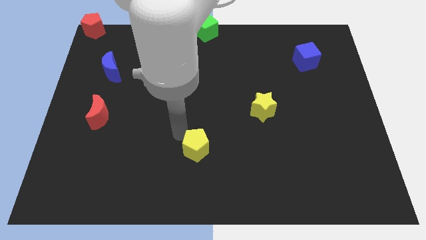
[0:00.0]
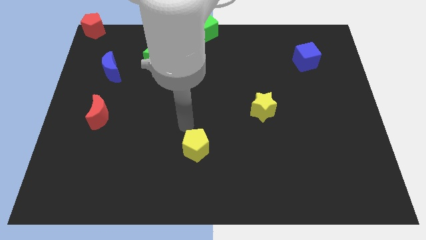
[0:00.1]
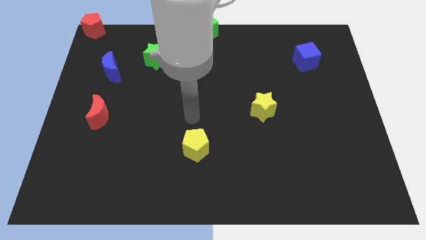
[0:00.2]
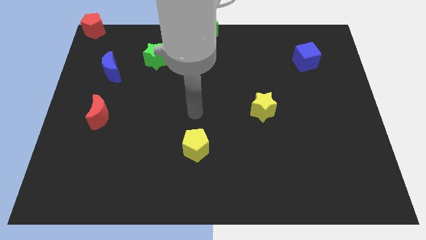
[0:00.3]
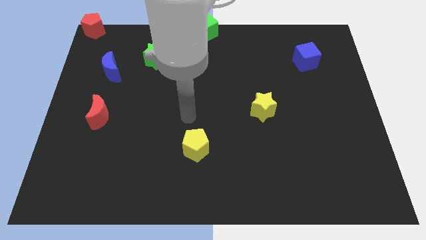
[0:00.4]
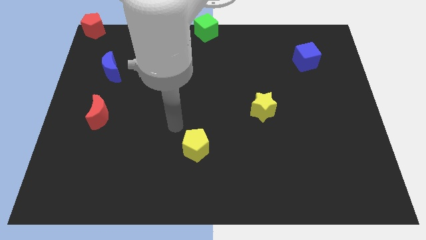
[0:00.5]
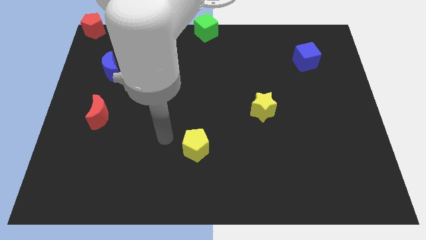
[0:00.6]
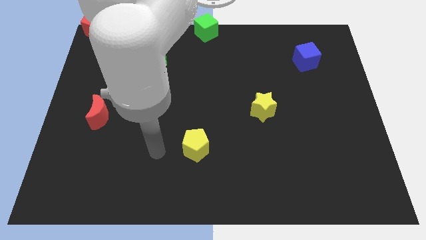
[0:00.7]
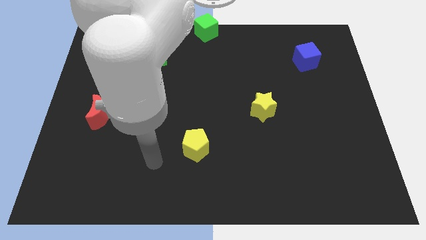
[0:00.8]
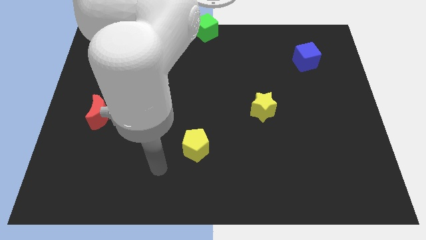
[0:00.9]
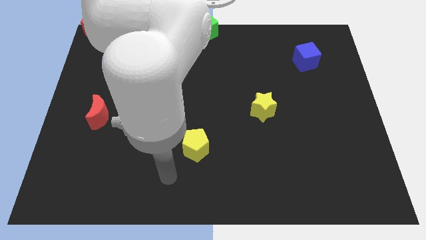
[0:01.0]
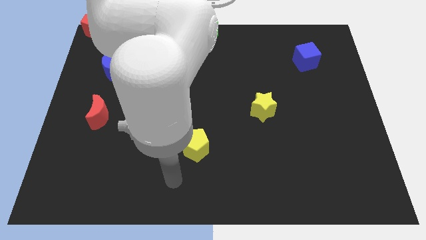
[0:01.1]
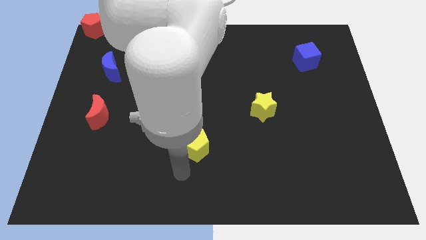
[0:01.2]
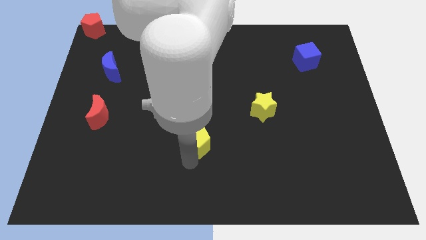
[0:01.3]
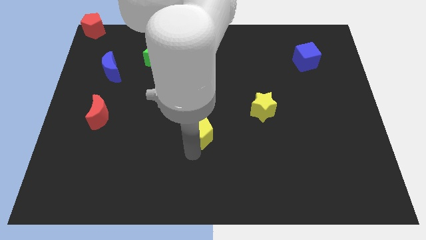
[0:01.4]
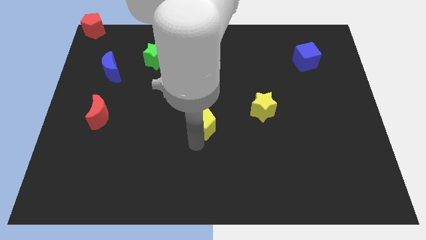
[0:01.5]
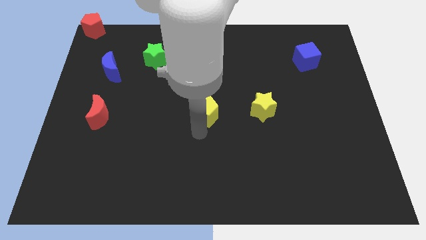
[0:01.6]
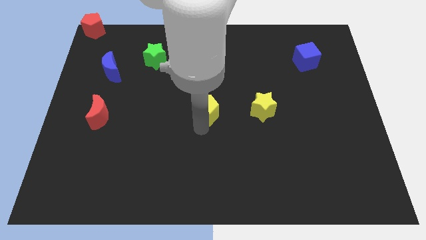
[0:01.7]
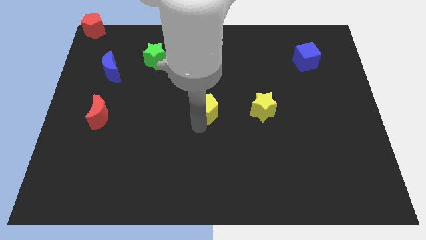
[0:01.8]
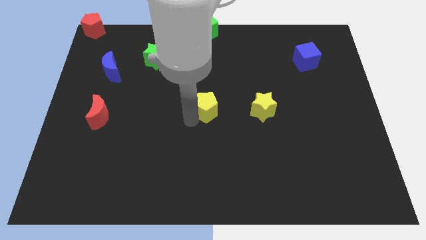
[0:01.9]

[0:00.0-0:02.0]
push the yellow pentagon to the left of the yellow star

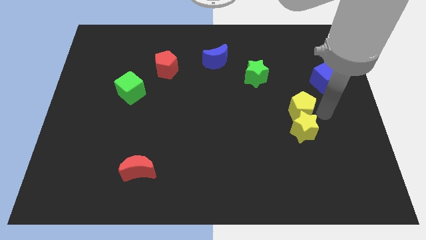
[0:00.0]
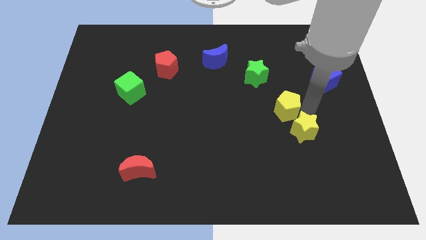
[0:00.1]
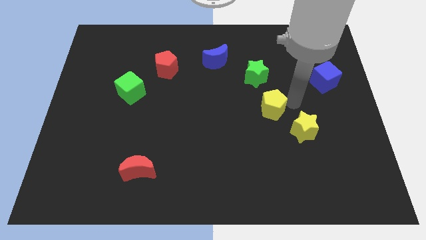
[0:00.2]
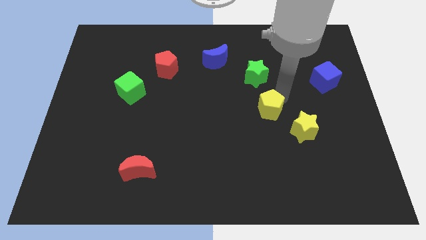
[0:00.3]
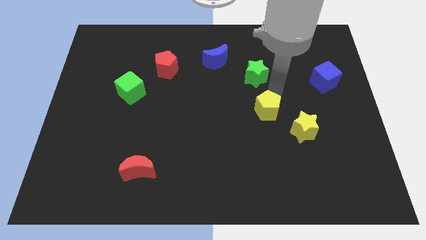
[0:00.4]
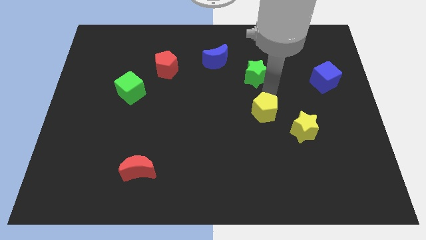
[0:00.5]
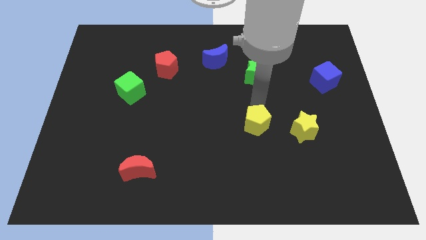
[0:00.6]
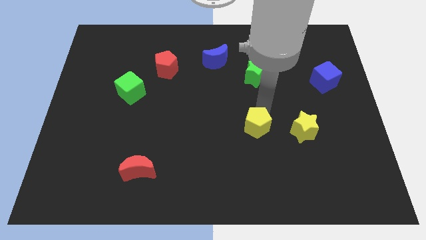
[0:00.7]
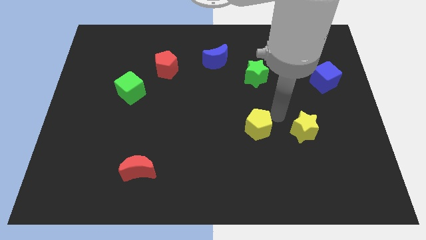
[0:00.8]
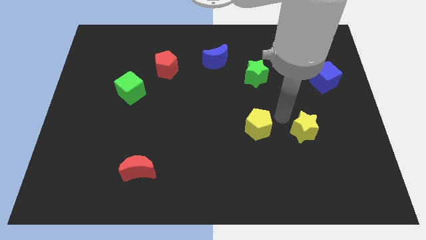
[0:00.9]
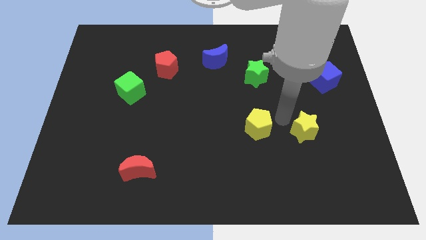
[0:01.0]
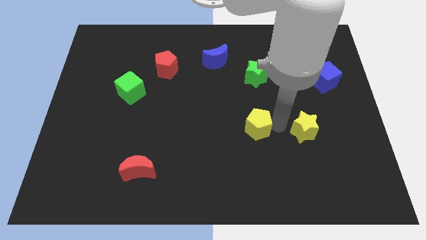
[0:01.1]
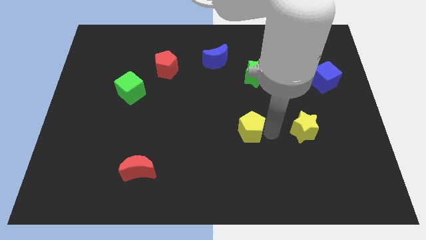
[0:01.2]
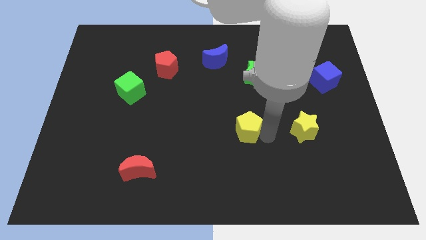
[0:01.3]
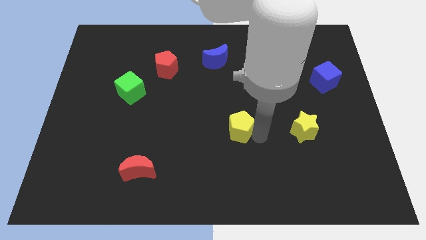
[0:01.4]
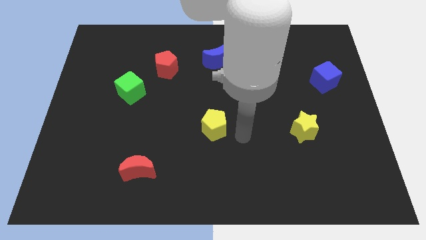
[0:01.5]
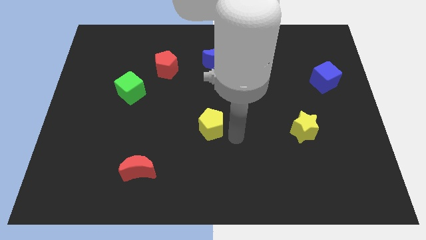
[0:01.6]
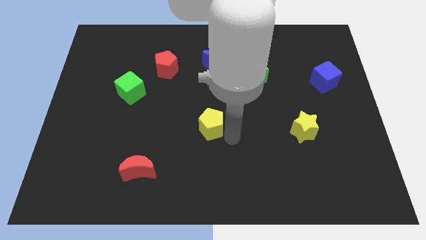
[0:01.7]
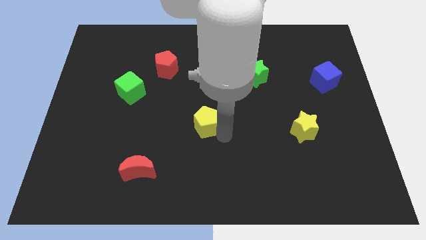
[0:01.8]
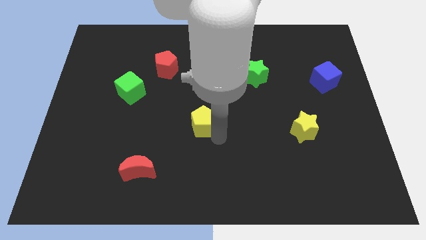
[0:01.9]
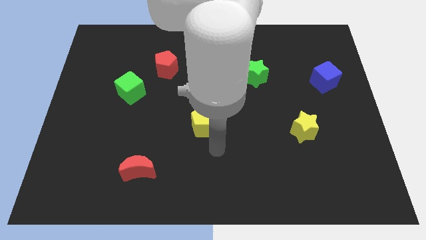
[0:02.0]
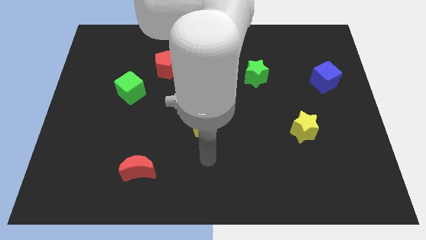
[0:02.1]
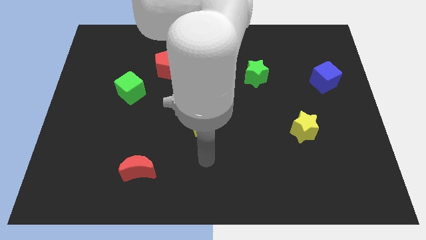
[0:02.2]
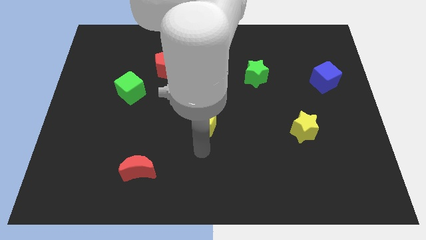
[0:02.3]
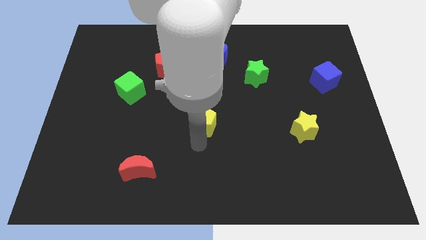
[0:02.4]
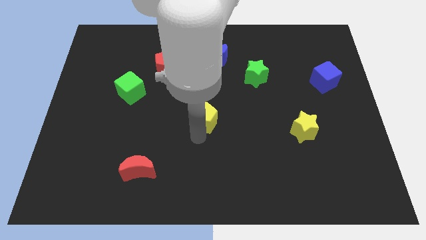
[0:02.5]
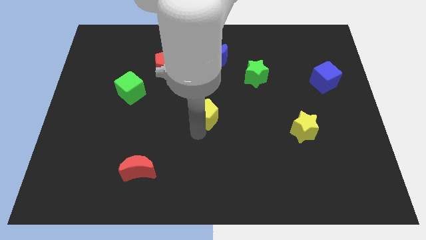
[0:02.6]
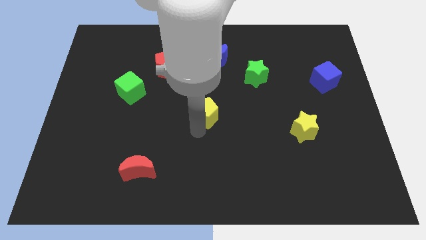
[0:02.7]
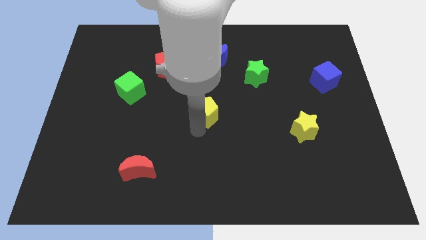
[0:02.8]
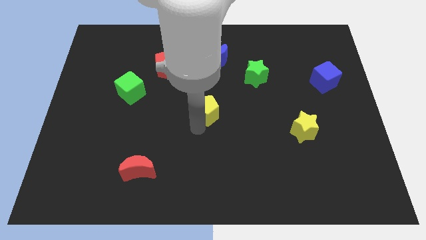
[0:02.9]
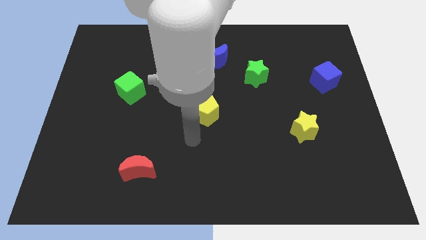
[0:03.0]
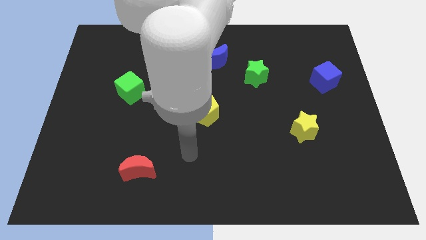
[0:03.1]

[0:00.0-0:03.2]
push the yellow pentagon to the right of the green cube

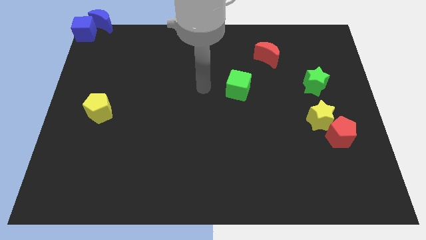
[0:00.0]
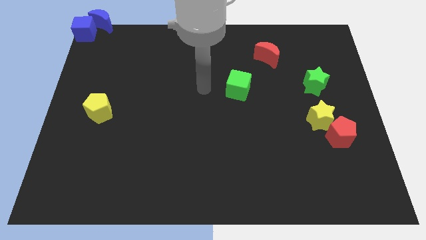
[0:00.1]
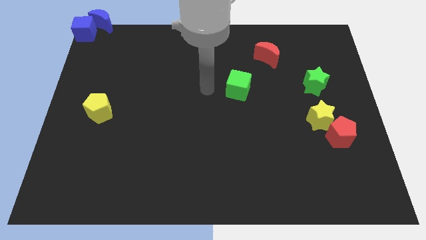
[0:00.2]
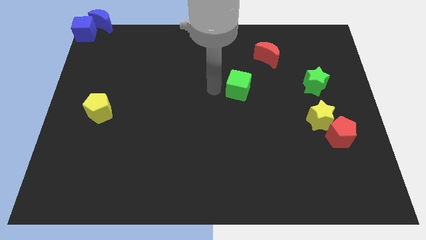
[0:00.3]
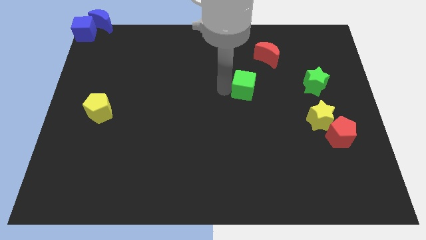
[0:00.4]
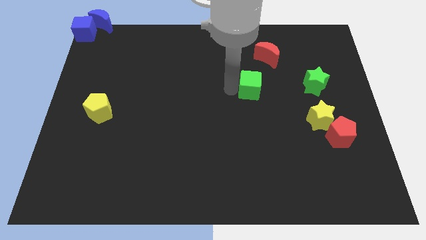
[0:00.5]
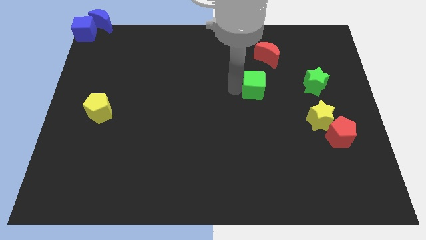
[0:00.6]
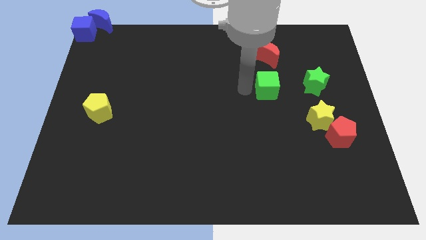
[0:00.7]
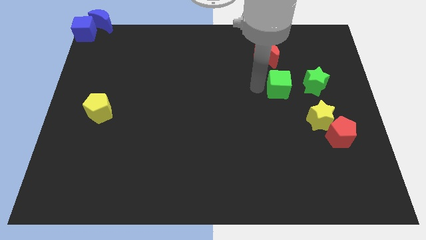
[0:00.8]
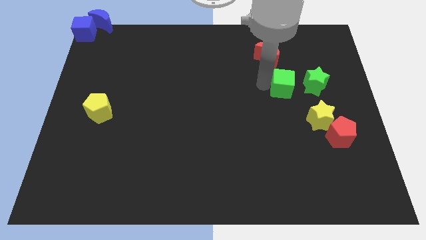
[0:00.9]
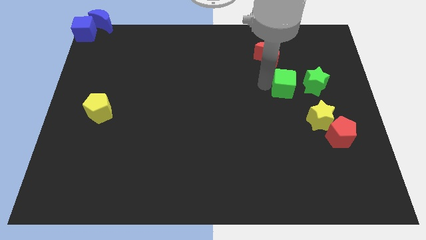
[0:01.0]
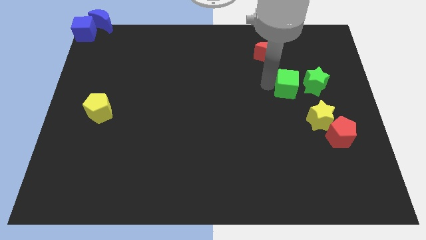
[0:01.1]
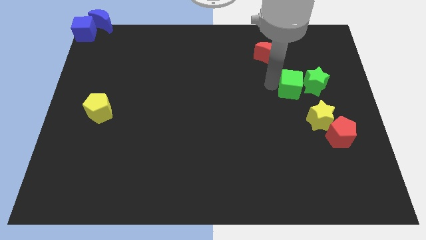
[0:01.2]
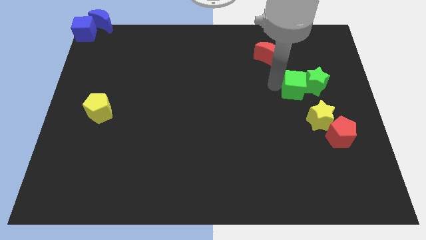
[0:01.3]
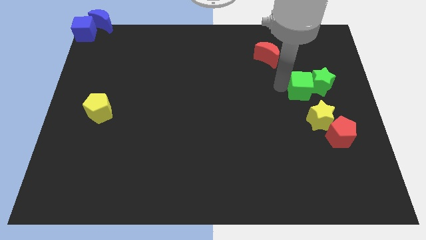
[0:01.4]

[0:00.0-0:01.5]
push the green cube to the left of green star

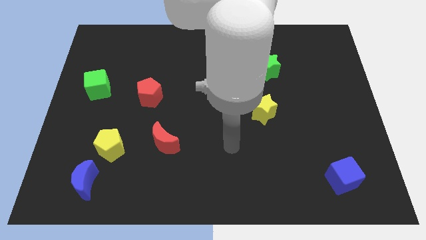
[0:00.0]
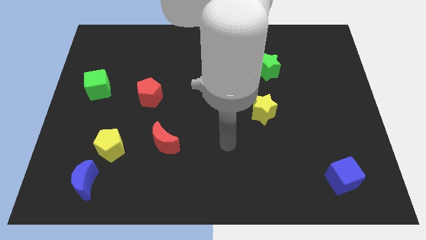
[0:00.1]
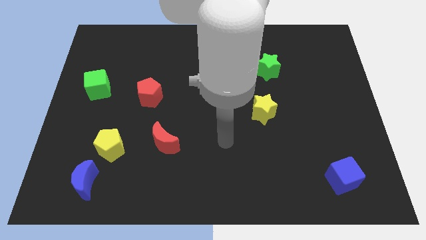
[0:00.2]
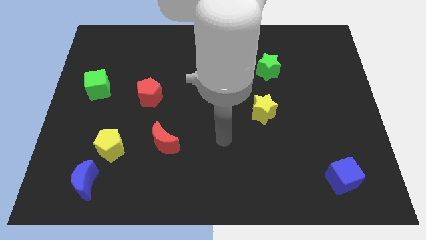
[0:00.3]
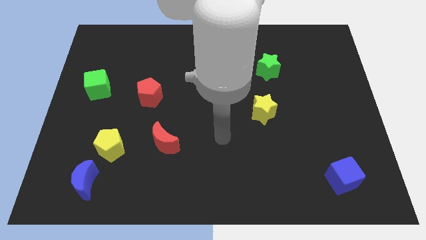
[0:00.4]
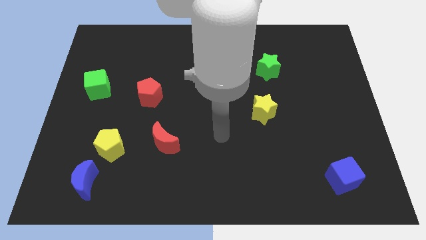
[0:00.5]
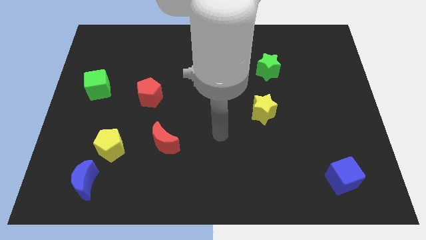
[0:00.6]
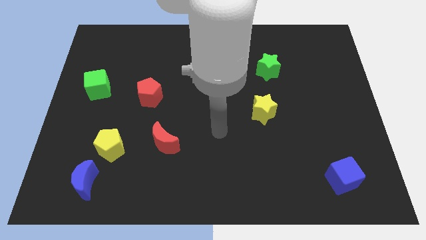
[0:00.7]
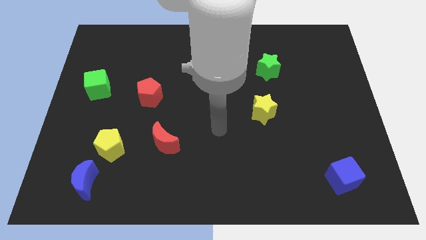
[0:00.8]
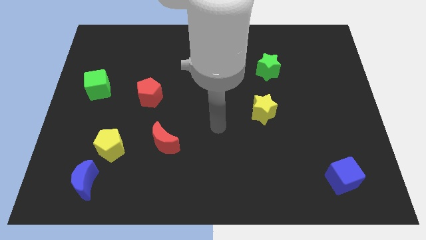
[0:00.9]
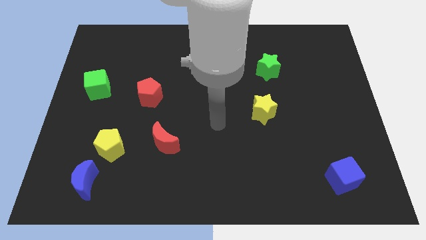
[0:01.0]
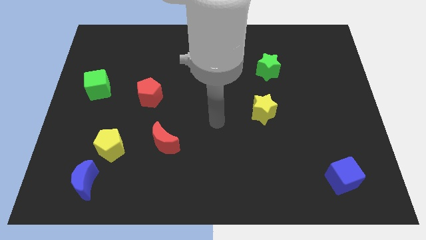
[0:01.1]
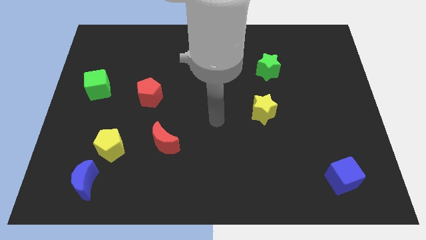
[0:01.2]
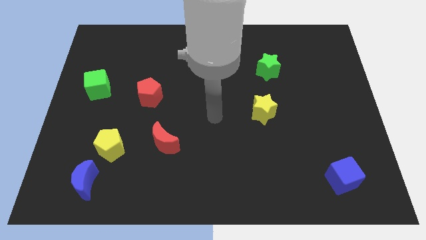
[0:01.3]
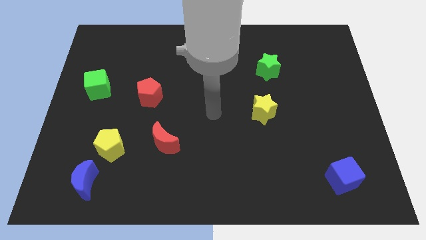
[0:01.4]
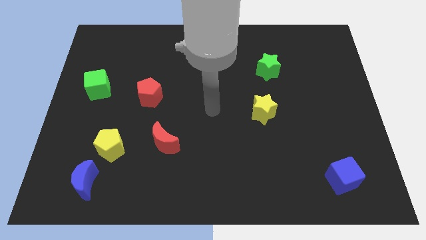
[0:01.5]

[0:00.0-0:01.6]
point your arm at the center of the board

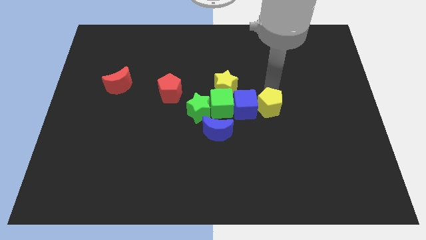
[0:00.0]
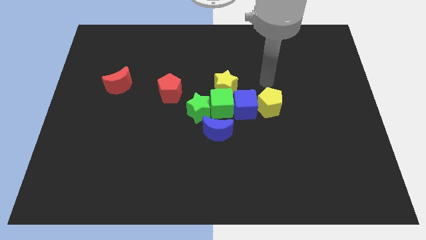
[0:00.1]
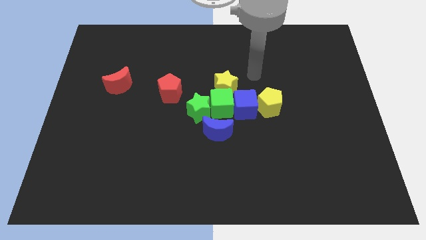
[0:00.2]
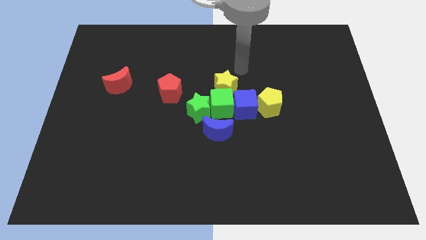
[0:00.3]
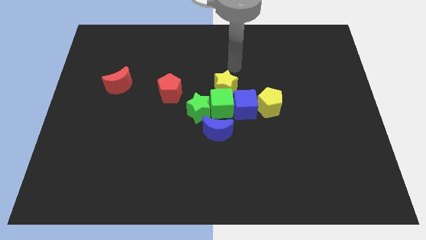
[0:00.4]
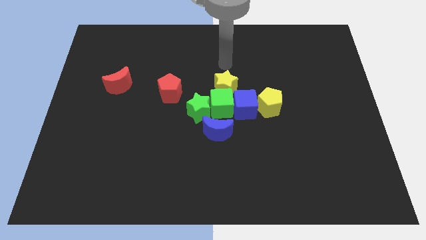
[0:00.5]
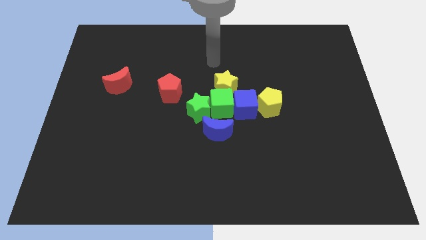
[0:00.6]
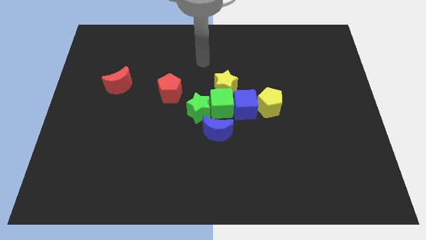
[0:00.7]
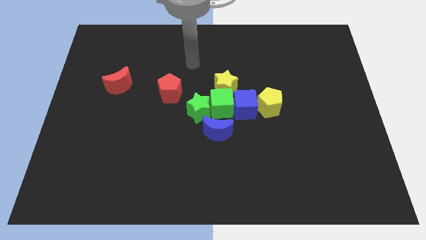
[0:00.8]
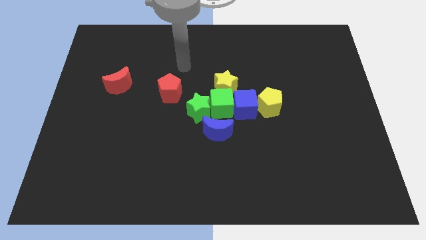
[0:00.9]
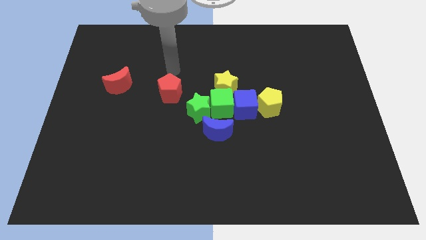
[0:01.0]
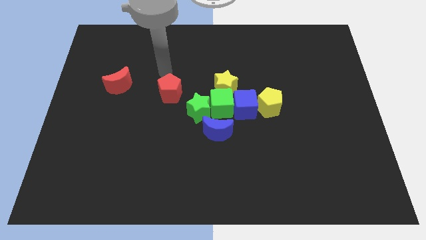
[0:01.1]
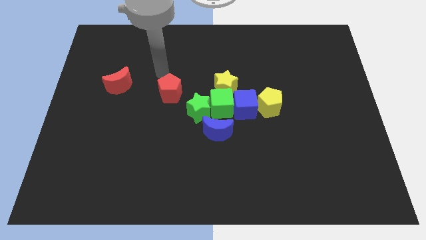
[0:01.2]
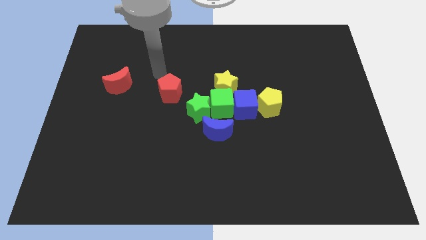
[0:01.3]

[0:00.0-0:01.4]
move your arm towards red pentagon
